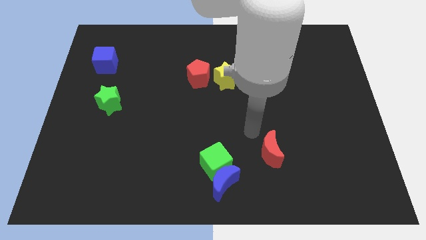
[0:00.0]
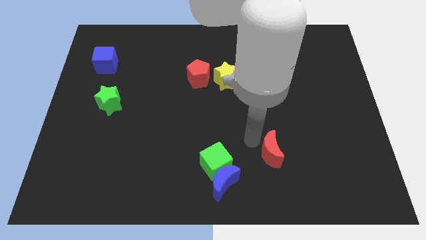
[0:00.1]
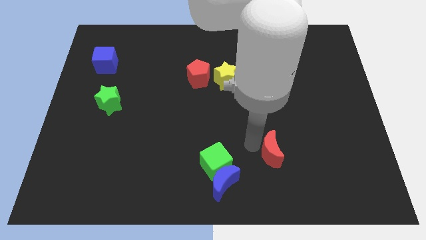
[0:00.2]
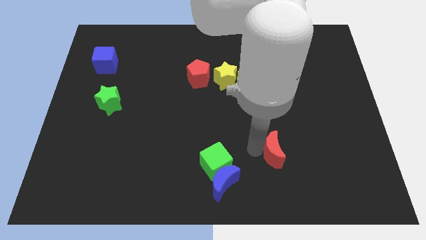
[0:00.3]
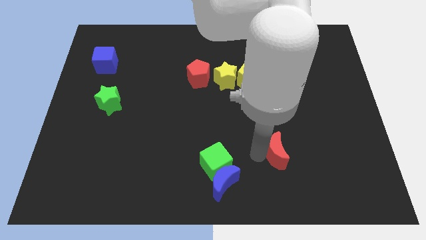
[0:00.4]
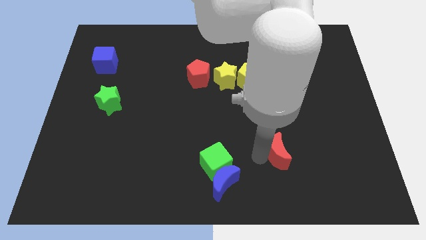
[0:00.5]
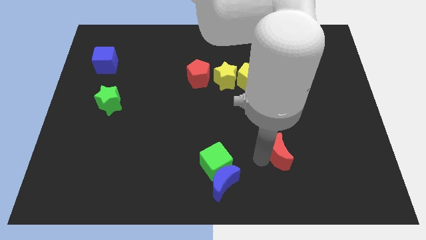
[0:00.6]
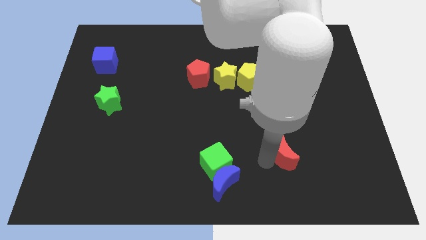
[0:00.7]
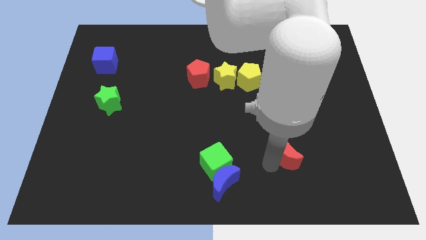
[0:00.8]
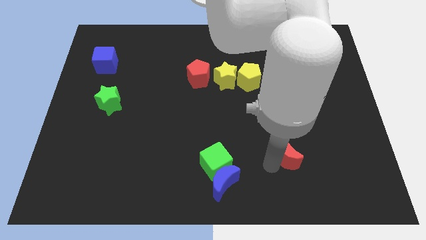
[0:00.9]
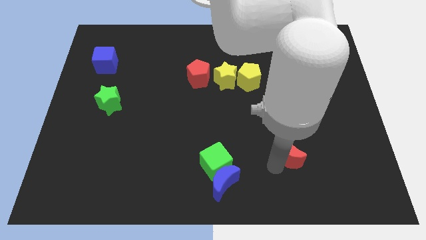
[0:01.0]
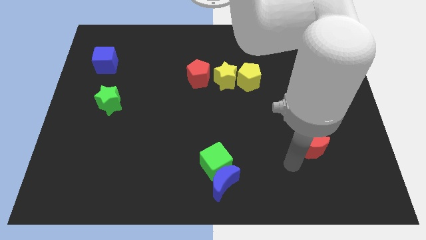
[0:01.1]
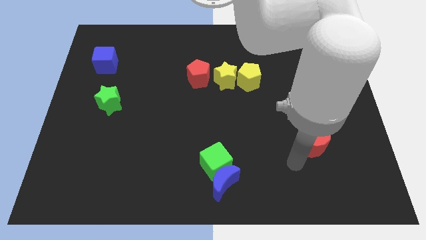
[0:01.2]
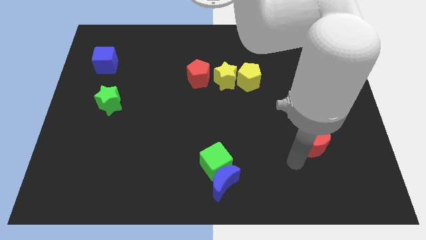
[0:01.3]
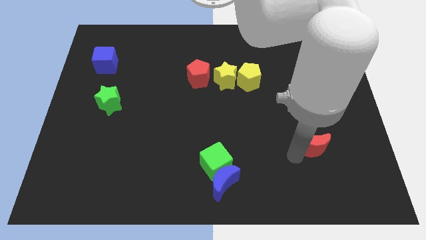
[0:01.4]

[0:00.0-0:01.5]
slightly move the red moon towards the right

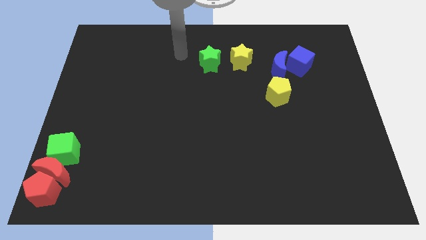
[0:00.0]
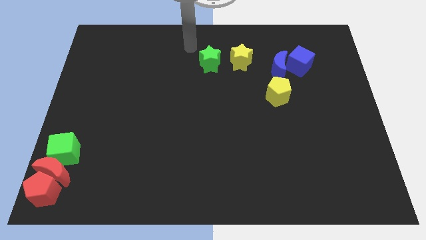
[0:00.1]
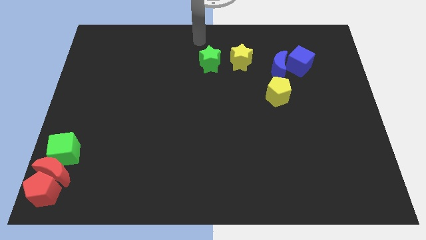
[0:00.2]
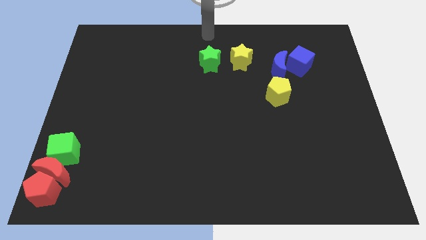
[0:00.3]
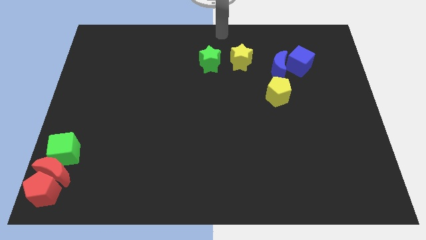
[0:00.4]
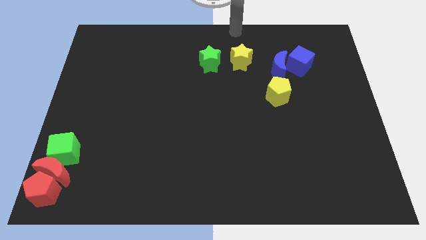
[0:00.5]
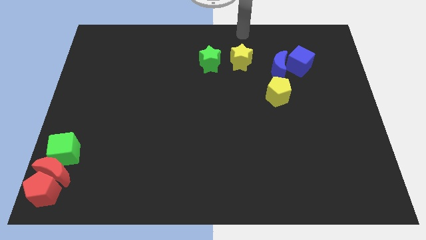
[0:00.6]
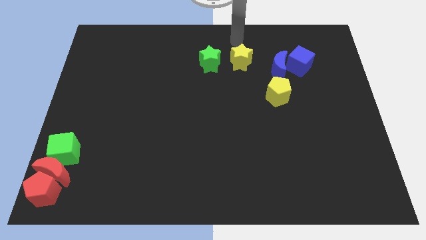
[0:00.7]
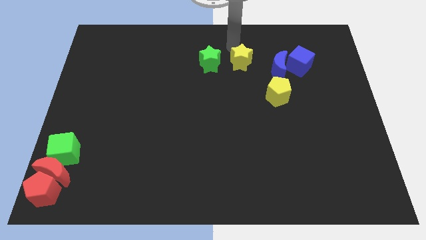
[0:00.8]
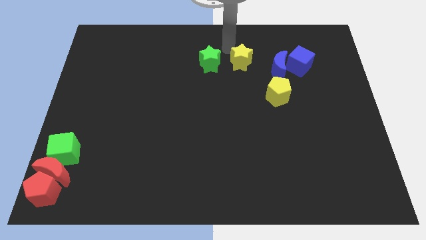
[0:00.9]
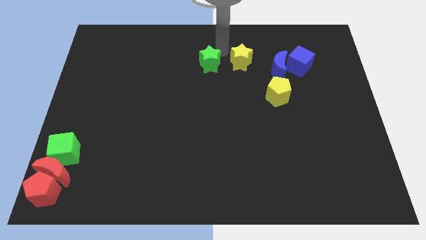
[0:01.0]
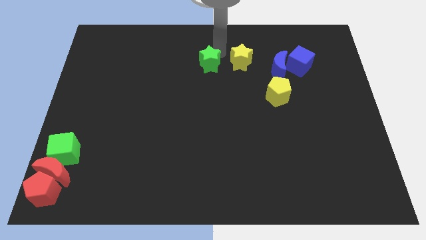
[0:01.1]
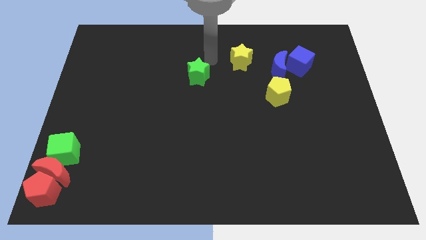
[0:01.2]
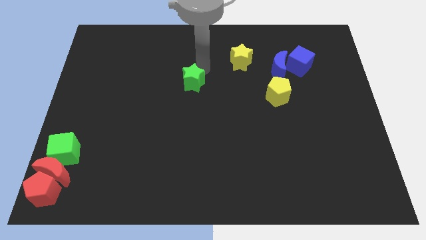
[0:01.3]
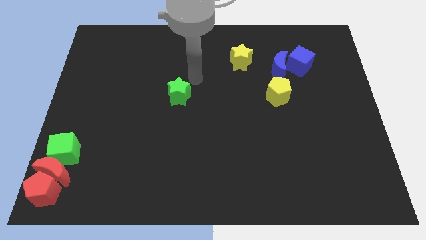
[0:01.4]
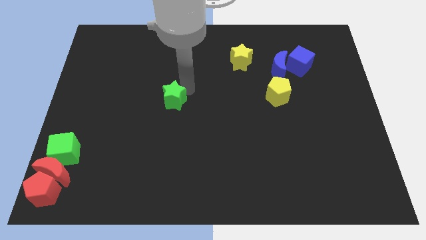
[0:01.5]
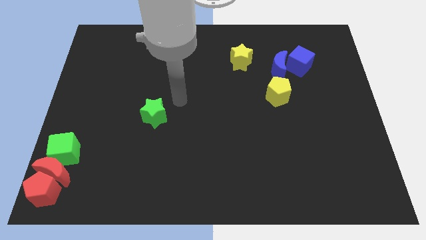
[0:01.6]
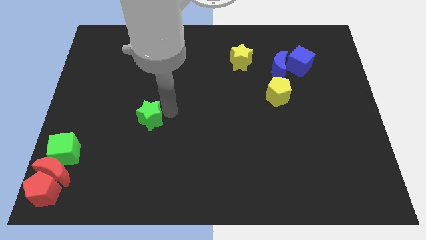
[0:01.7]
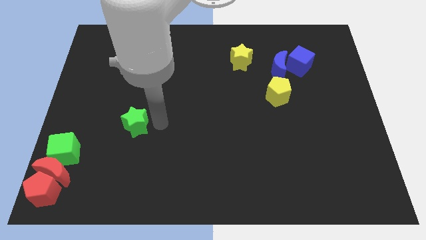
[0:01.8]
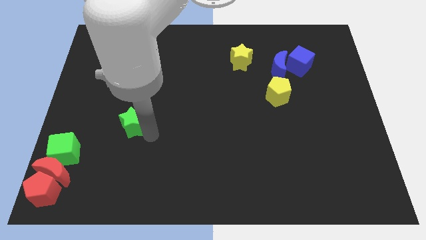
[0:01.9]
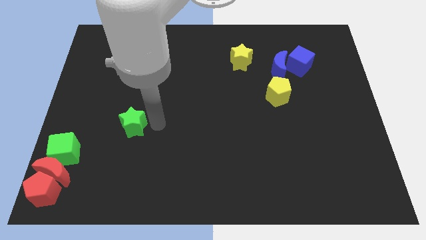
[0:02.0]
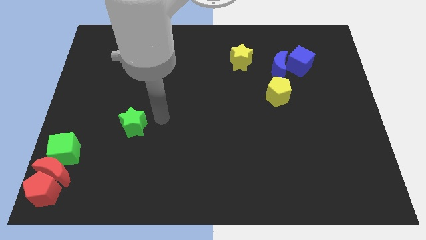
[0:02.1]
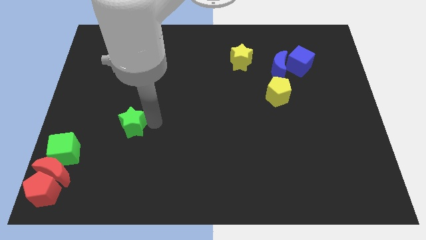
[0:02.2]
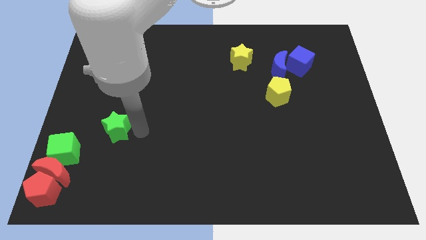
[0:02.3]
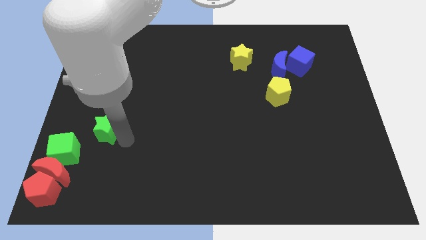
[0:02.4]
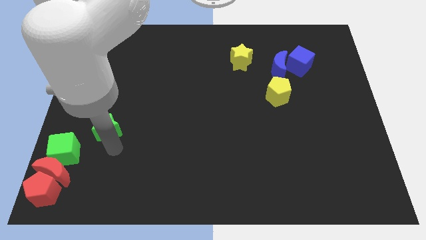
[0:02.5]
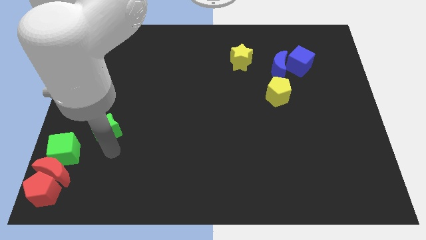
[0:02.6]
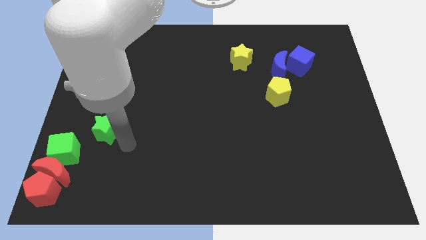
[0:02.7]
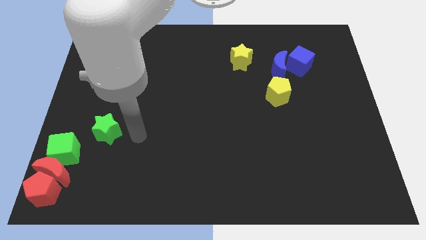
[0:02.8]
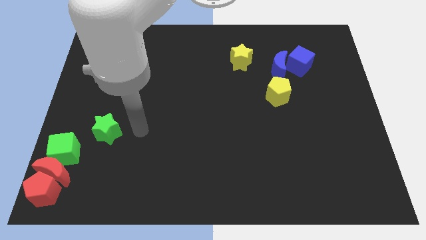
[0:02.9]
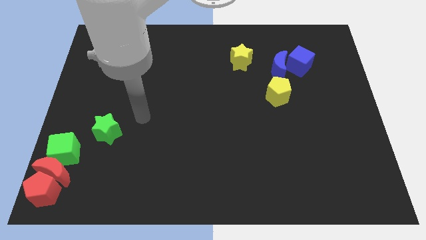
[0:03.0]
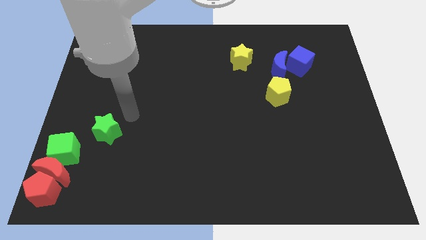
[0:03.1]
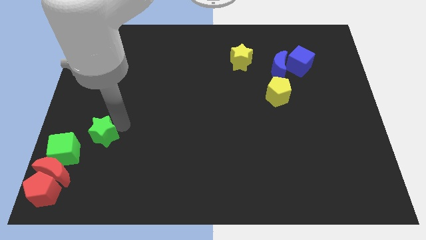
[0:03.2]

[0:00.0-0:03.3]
move the green star away from the yellow star

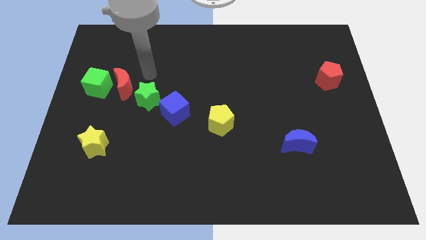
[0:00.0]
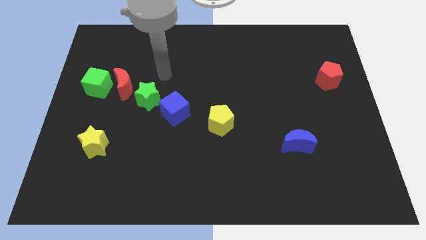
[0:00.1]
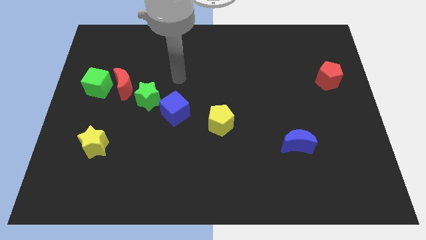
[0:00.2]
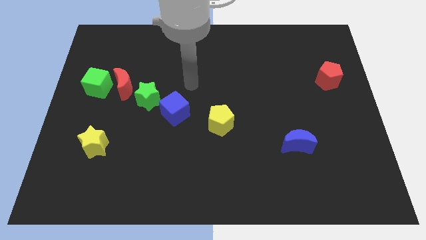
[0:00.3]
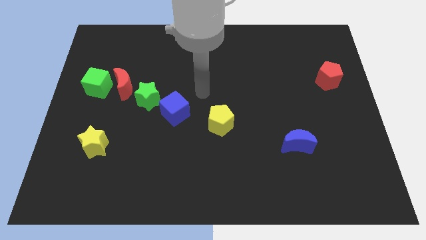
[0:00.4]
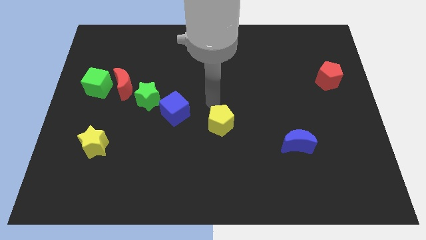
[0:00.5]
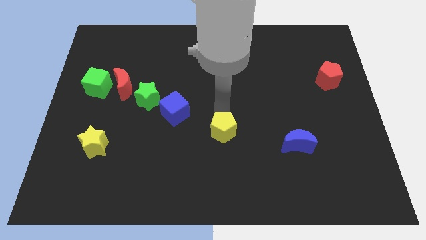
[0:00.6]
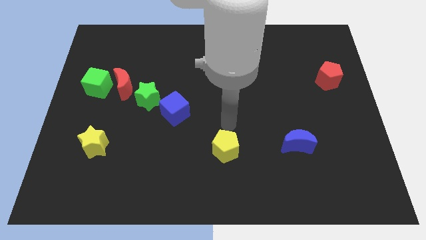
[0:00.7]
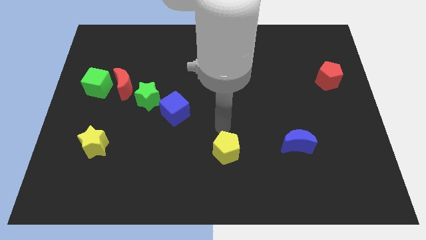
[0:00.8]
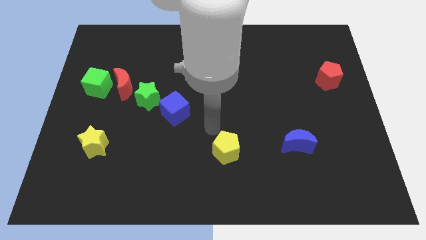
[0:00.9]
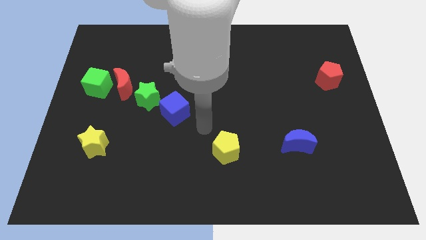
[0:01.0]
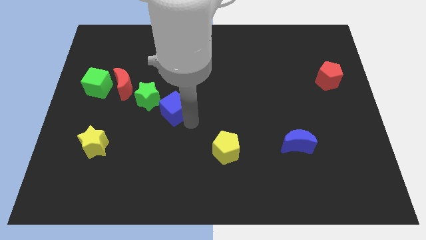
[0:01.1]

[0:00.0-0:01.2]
slightly push the yellow pentagon down

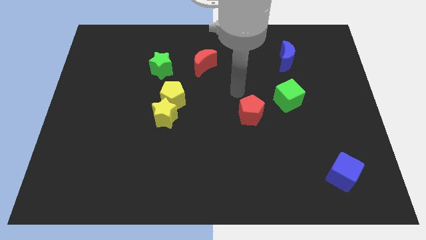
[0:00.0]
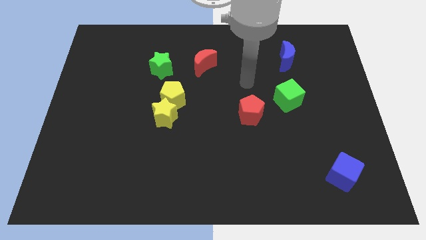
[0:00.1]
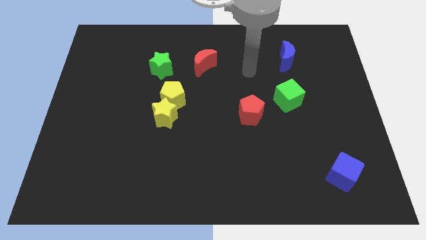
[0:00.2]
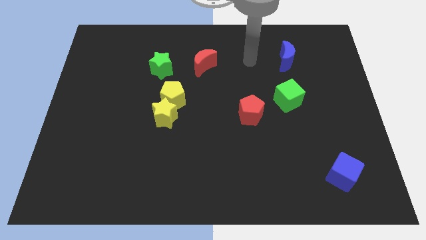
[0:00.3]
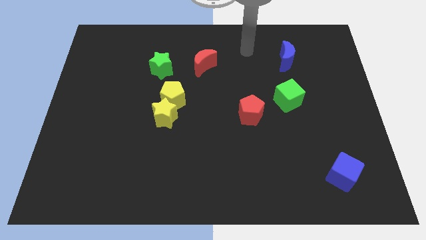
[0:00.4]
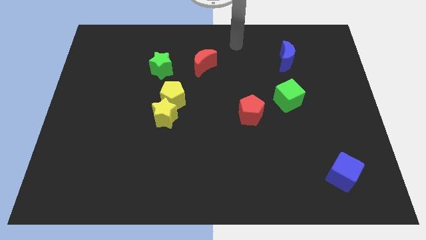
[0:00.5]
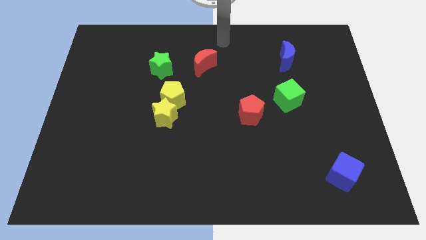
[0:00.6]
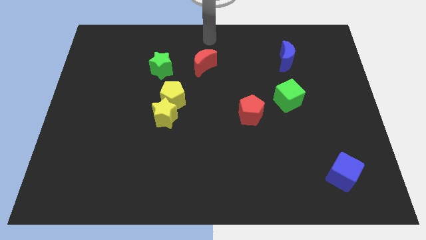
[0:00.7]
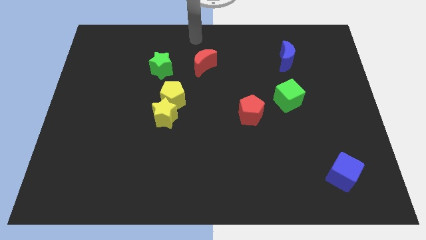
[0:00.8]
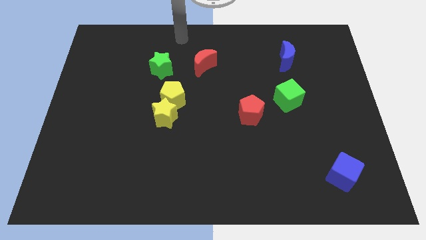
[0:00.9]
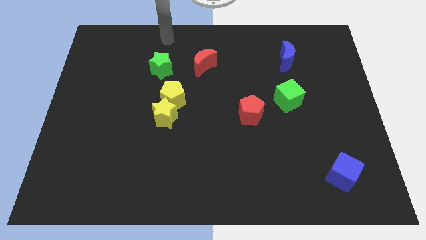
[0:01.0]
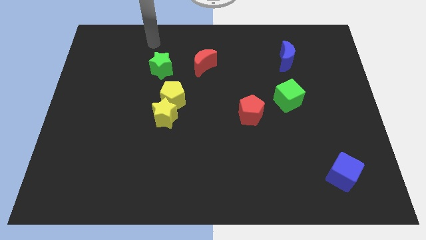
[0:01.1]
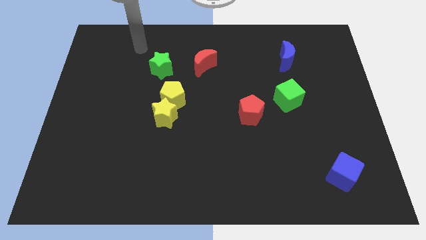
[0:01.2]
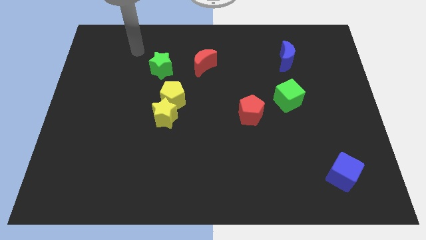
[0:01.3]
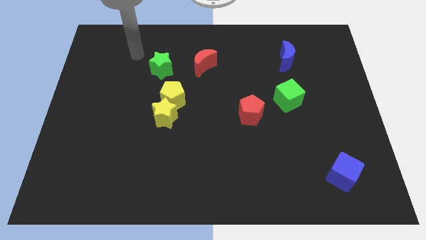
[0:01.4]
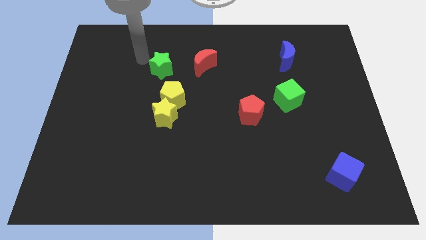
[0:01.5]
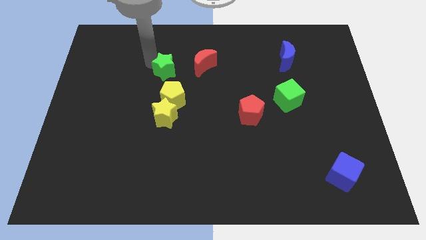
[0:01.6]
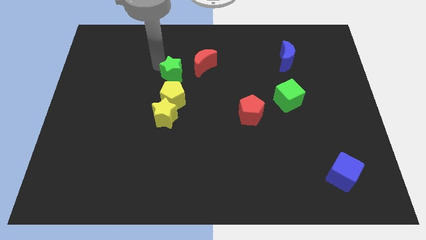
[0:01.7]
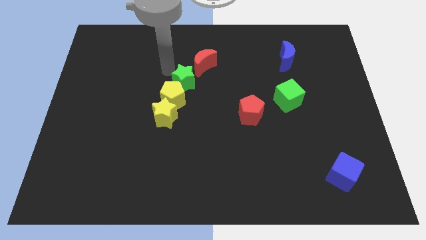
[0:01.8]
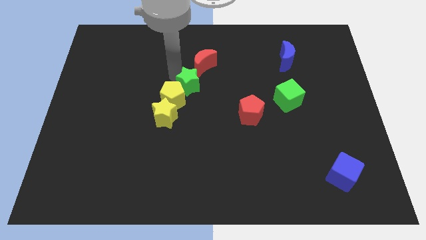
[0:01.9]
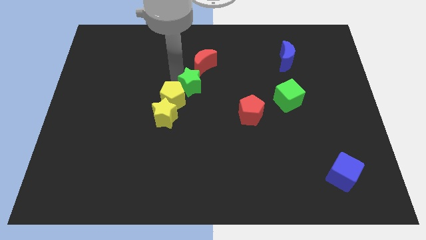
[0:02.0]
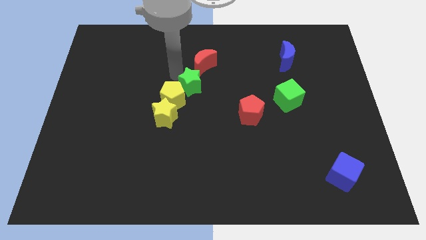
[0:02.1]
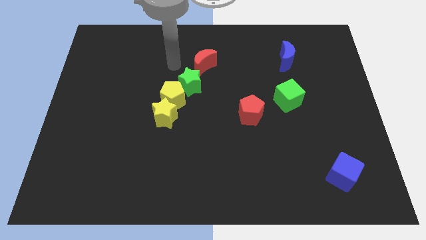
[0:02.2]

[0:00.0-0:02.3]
move the green star to the bottom left of the red crescent

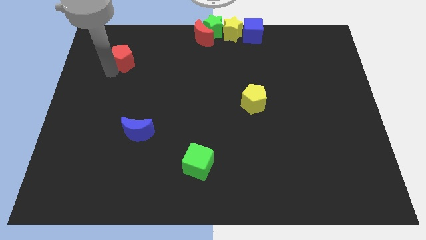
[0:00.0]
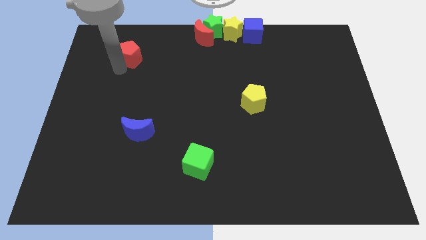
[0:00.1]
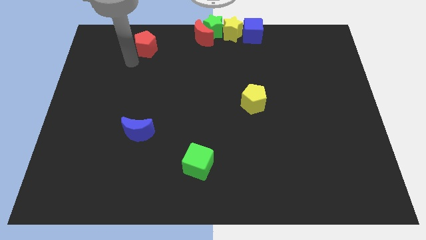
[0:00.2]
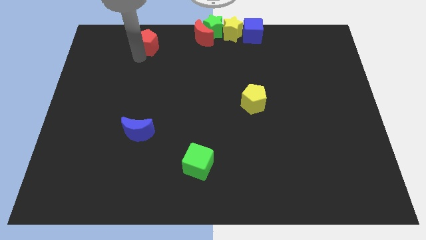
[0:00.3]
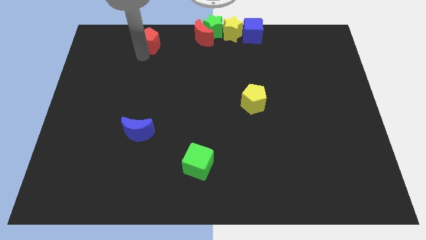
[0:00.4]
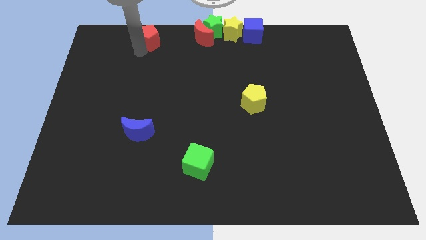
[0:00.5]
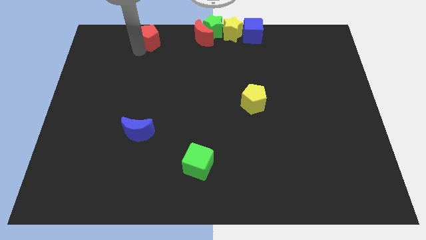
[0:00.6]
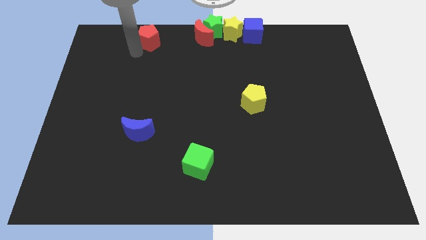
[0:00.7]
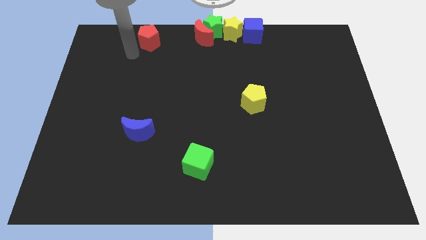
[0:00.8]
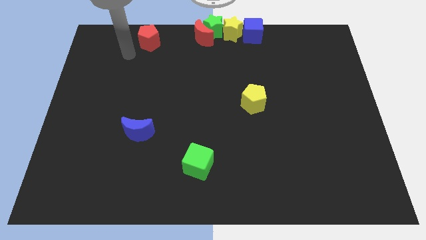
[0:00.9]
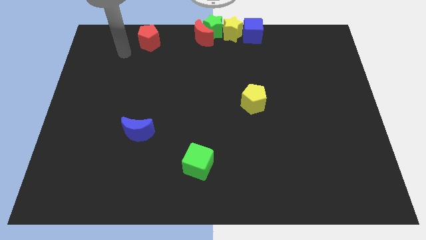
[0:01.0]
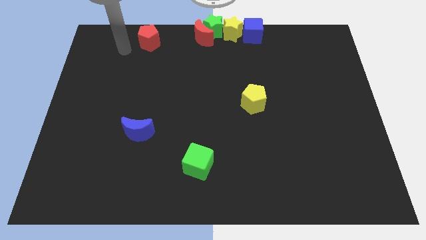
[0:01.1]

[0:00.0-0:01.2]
place red pentagon parallel left to red crescent
